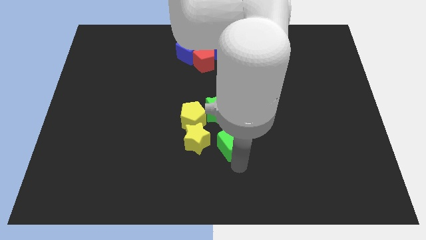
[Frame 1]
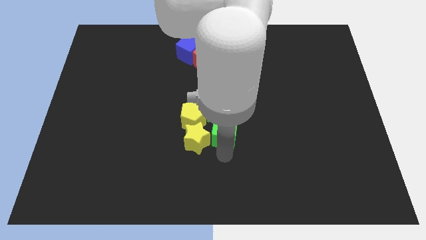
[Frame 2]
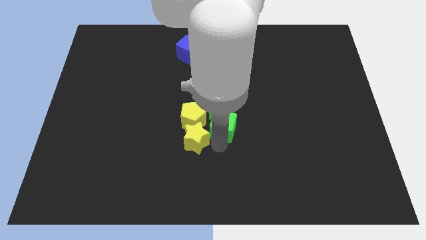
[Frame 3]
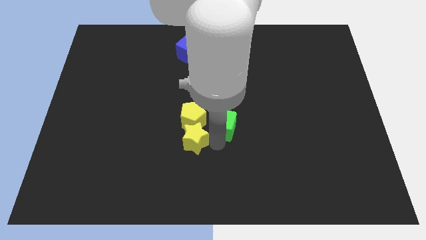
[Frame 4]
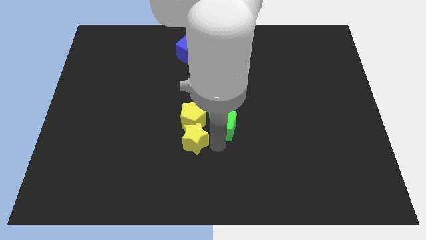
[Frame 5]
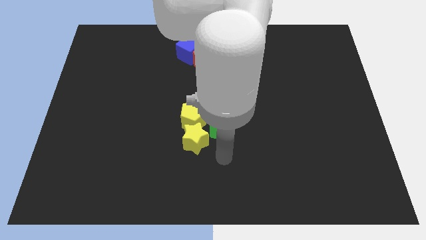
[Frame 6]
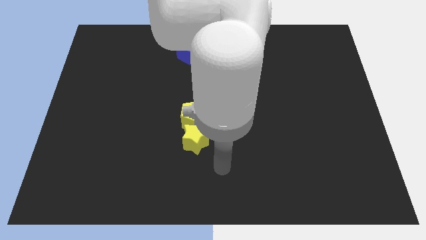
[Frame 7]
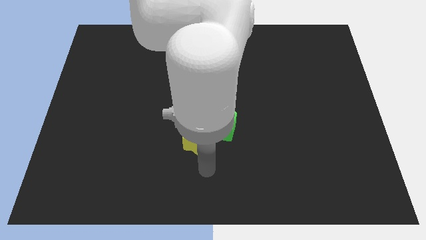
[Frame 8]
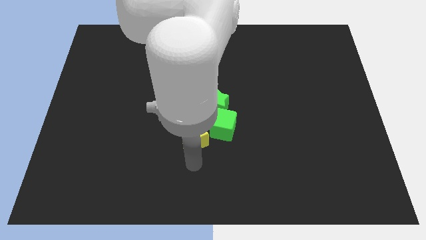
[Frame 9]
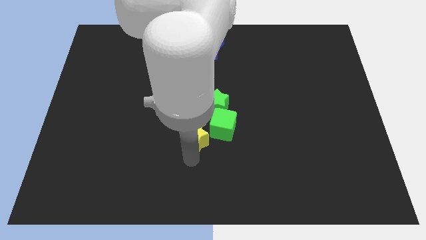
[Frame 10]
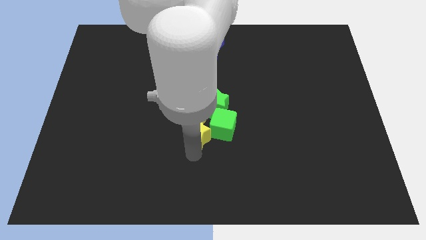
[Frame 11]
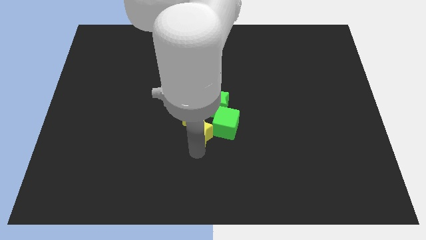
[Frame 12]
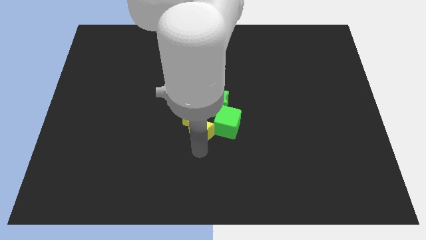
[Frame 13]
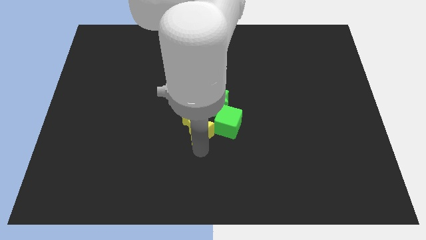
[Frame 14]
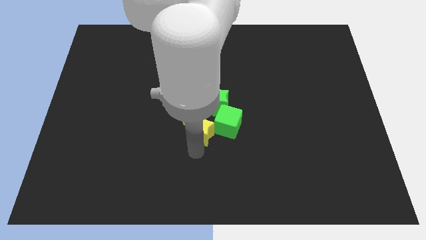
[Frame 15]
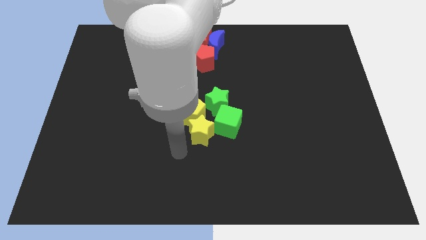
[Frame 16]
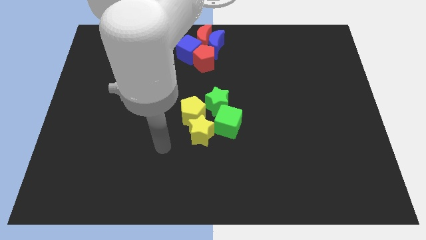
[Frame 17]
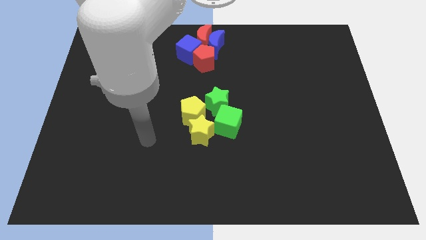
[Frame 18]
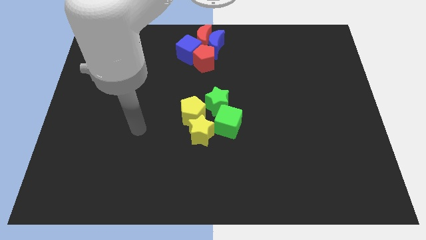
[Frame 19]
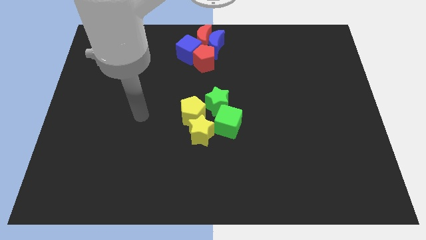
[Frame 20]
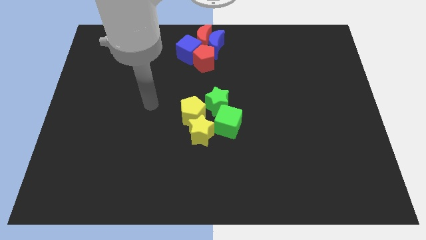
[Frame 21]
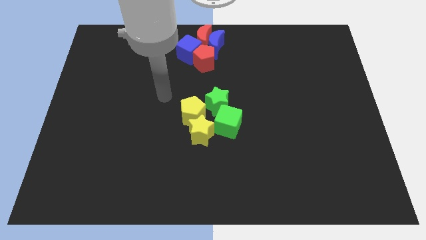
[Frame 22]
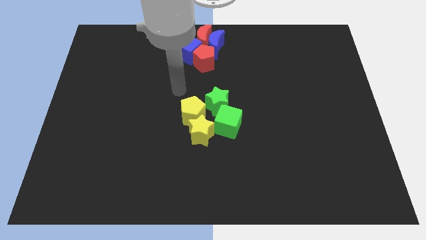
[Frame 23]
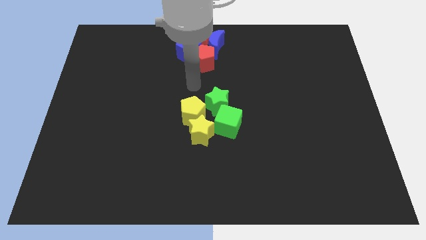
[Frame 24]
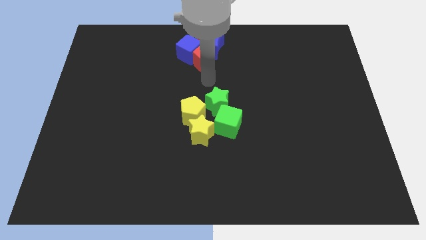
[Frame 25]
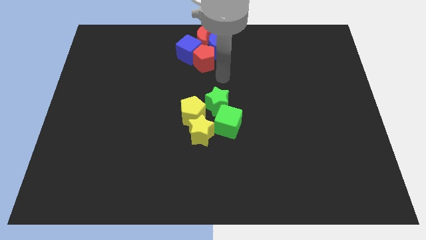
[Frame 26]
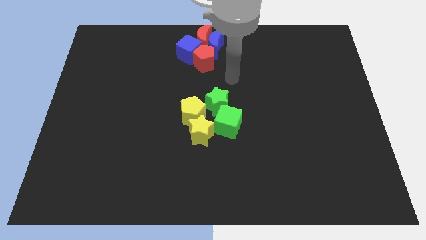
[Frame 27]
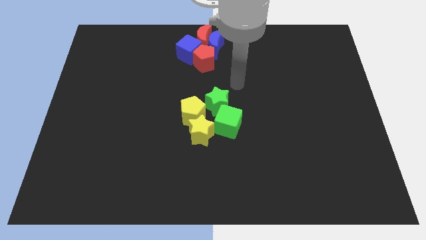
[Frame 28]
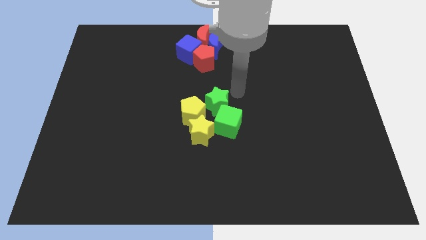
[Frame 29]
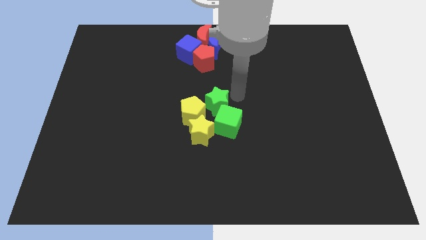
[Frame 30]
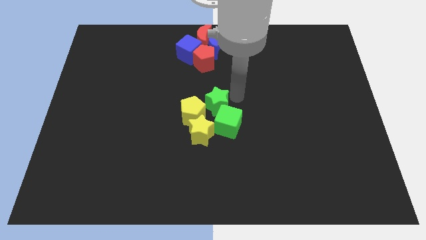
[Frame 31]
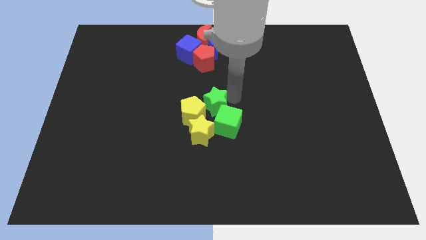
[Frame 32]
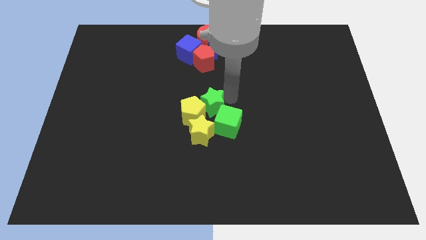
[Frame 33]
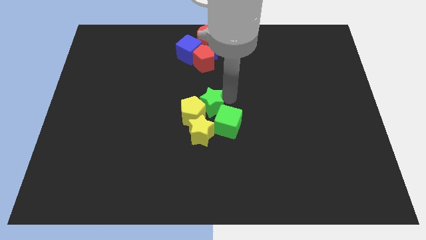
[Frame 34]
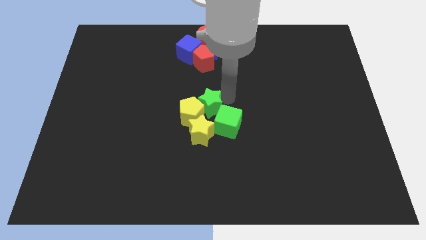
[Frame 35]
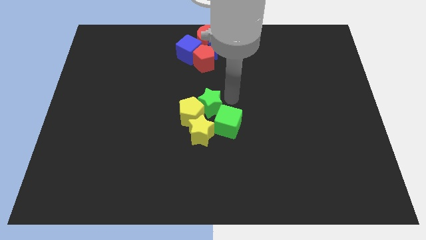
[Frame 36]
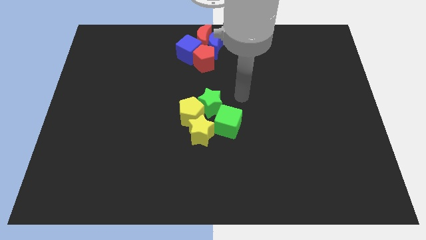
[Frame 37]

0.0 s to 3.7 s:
adjust the green star and yellow star into the square along with the green cube and yellow pentagon

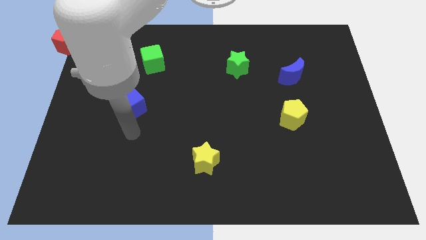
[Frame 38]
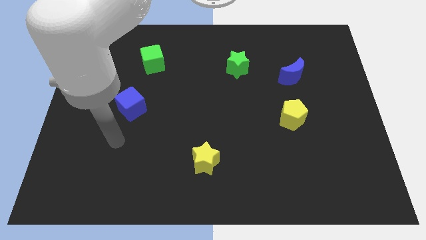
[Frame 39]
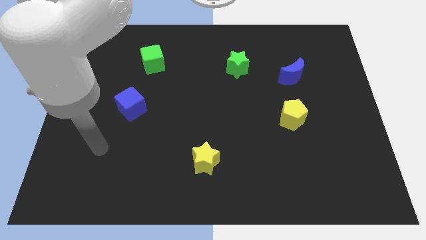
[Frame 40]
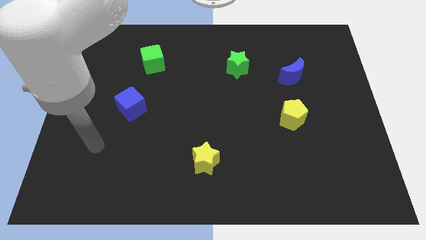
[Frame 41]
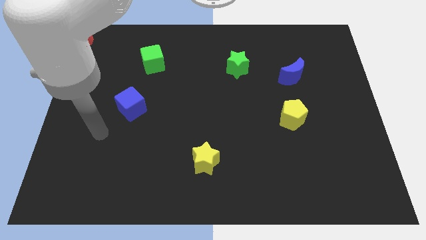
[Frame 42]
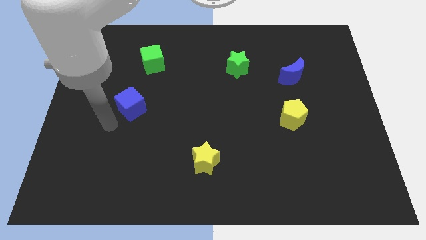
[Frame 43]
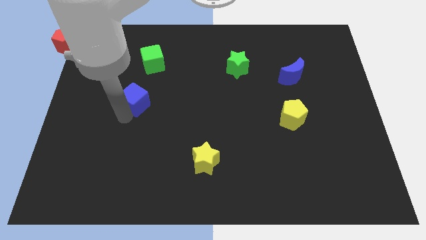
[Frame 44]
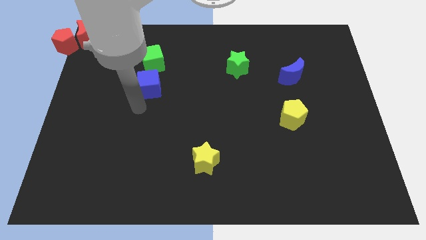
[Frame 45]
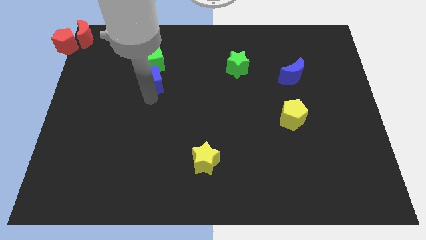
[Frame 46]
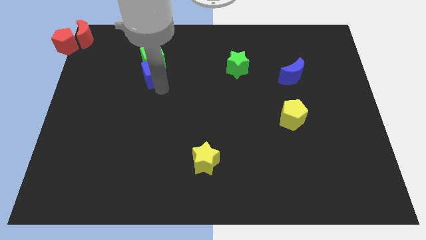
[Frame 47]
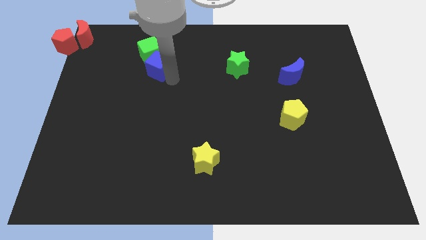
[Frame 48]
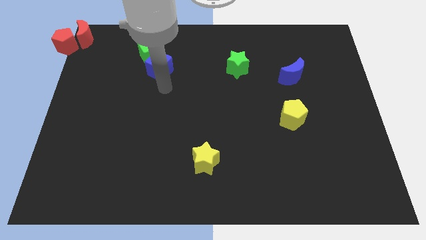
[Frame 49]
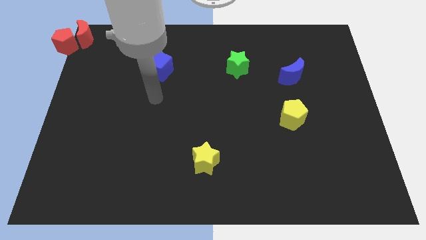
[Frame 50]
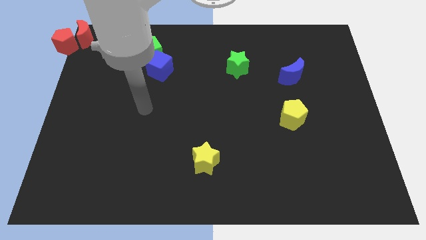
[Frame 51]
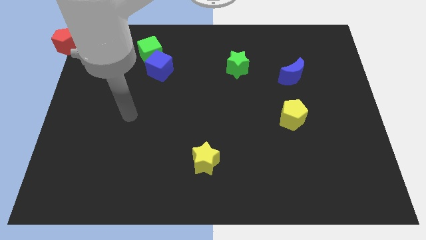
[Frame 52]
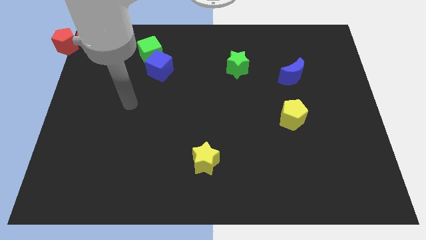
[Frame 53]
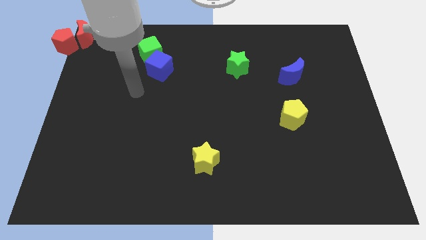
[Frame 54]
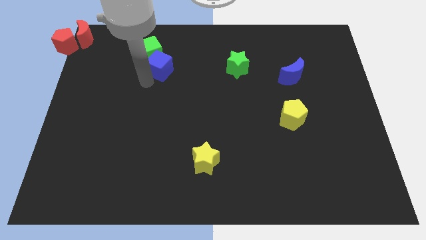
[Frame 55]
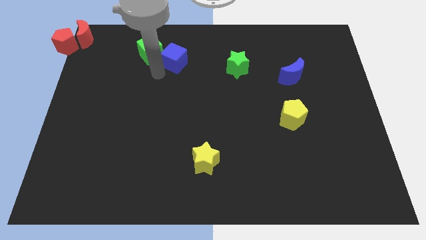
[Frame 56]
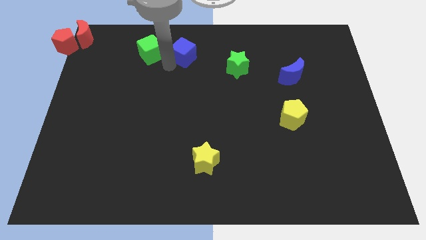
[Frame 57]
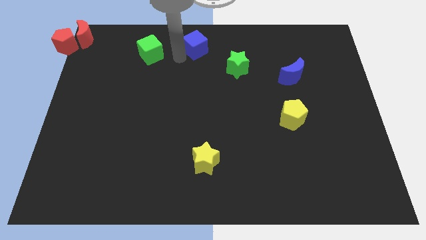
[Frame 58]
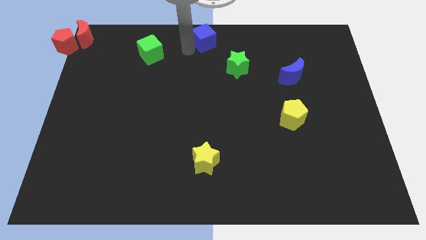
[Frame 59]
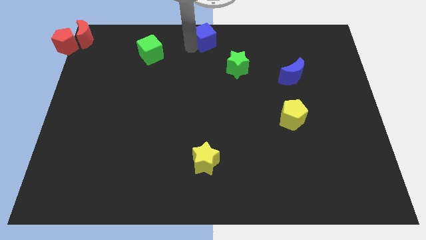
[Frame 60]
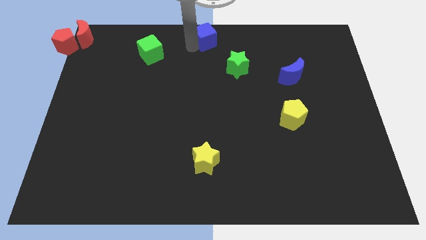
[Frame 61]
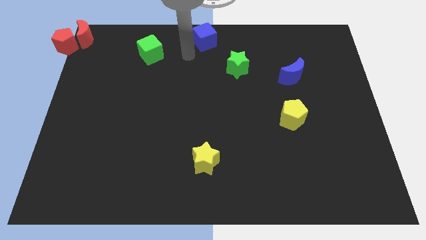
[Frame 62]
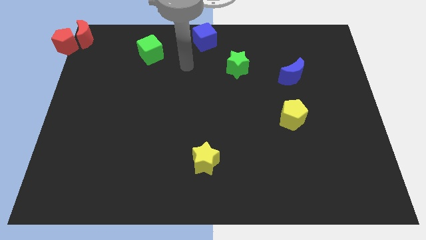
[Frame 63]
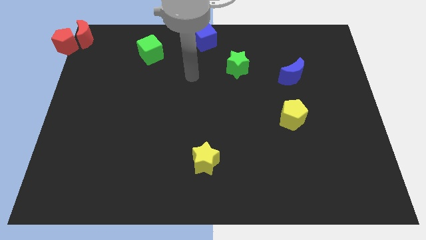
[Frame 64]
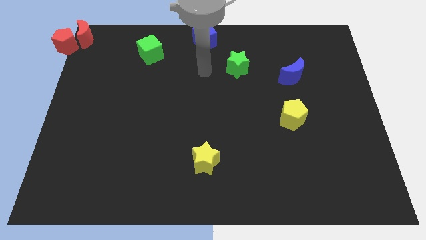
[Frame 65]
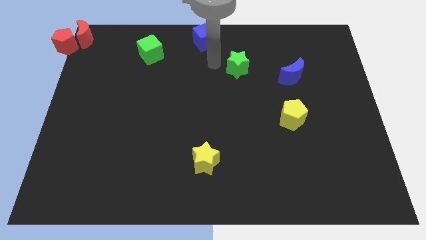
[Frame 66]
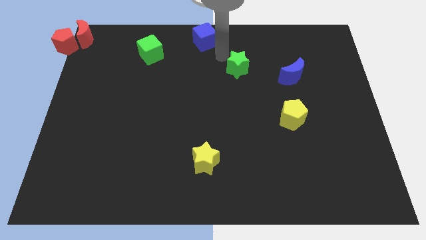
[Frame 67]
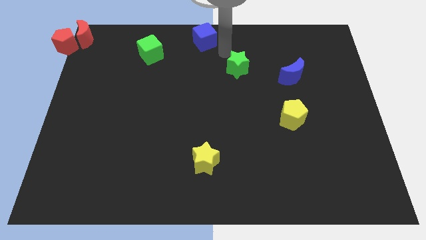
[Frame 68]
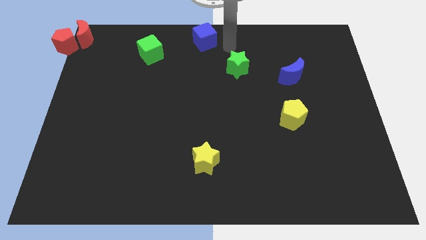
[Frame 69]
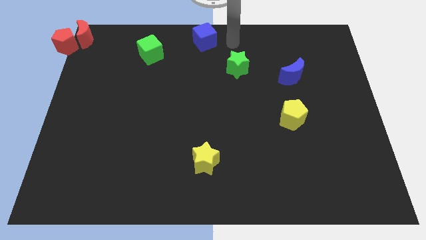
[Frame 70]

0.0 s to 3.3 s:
put the blue cube at the top left side of the green star

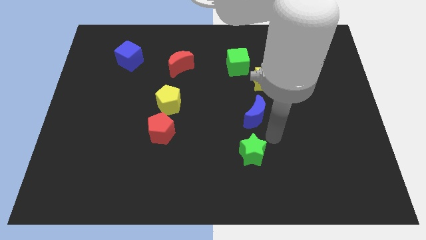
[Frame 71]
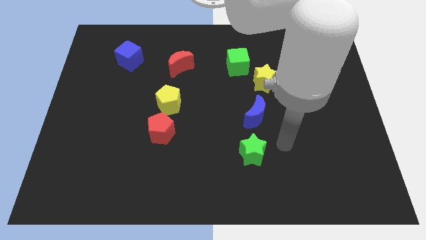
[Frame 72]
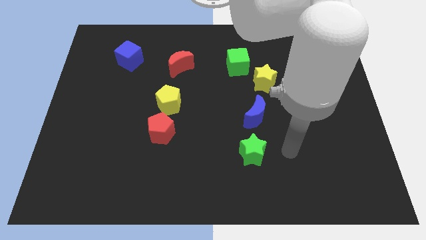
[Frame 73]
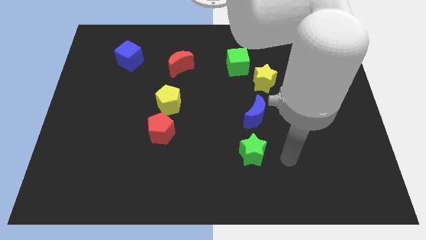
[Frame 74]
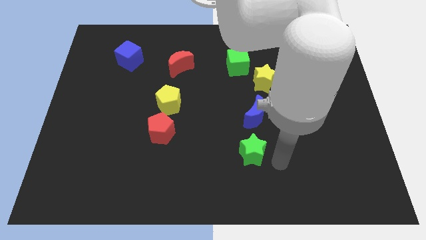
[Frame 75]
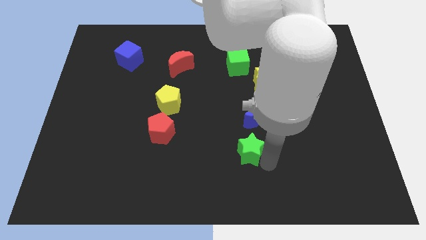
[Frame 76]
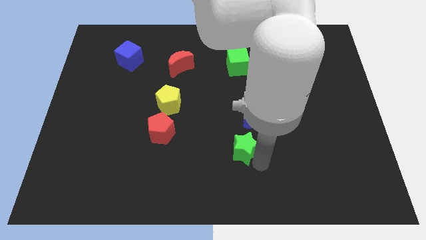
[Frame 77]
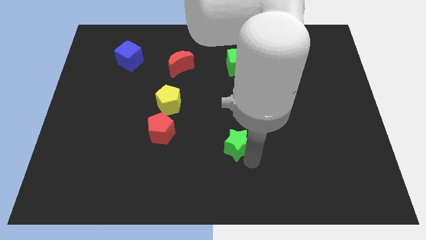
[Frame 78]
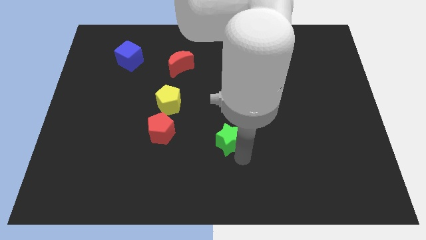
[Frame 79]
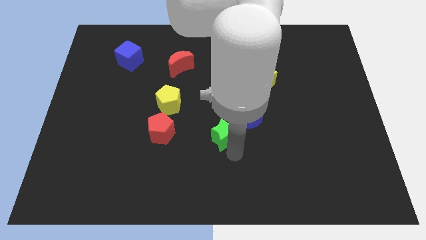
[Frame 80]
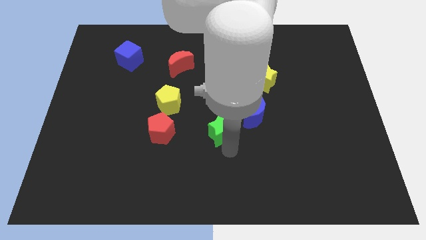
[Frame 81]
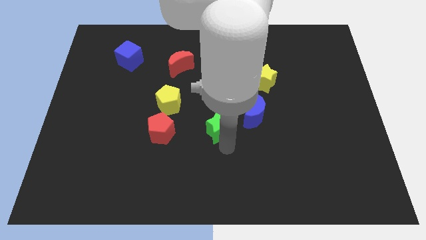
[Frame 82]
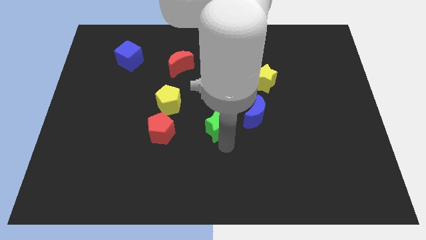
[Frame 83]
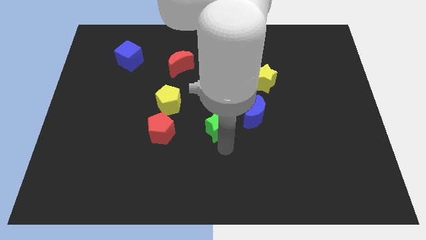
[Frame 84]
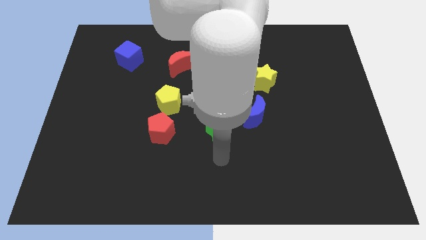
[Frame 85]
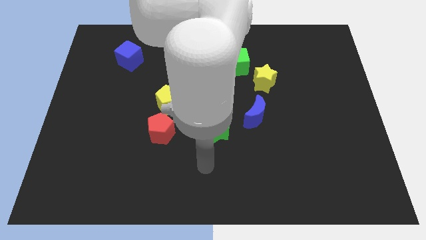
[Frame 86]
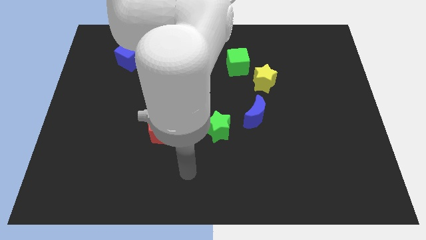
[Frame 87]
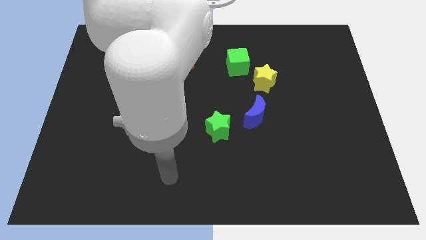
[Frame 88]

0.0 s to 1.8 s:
push the green star to the center of the board
